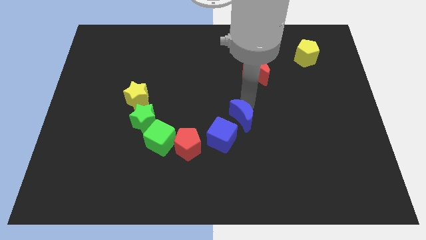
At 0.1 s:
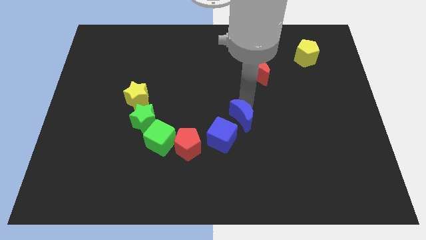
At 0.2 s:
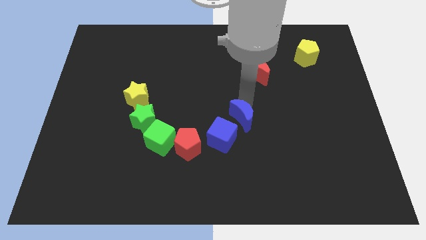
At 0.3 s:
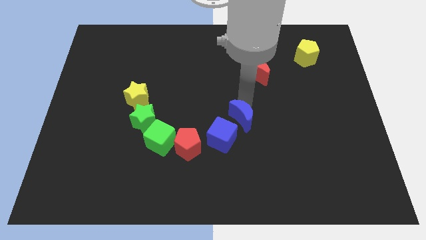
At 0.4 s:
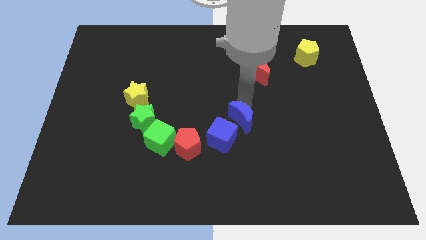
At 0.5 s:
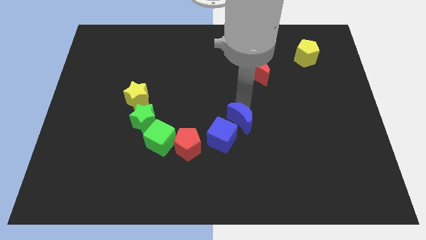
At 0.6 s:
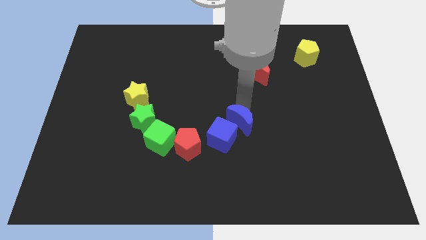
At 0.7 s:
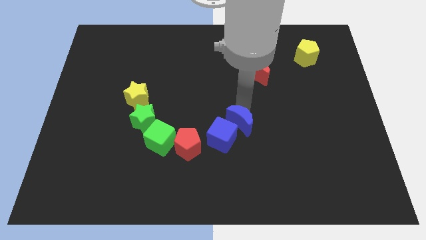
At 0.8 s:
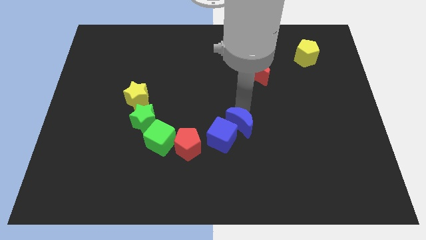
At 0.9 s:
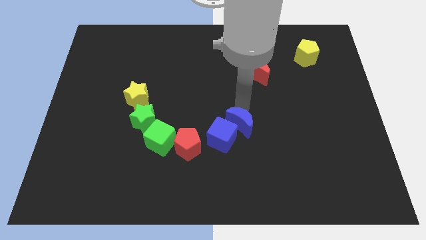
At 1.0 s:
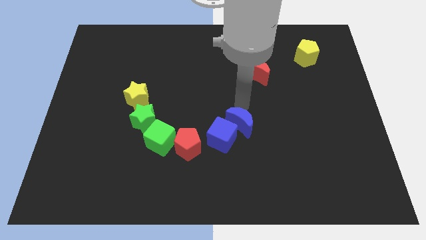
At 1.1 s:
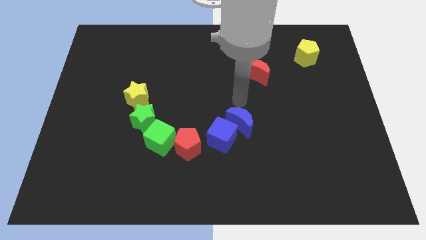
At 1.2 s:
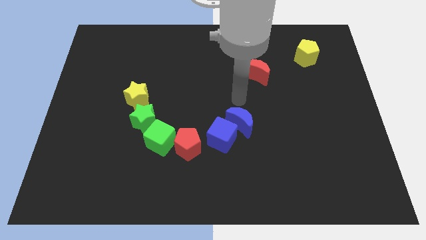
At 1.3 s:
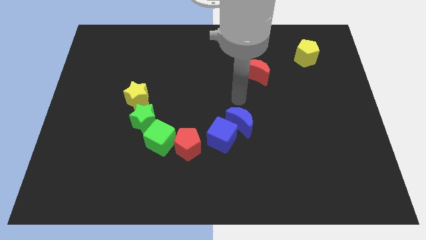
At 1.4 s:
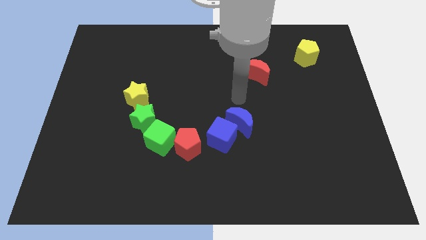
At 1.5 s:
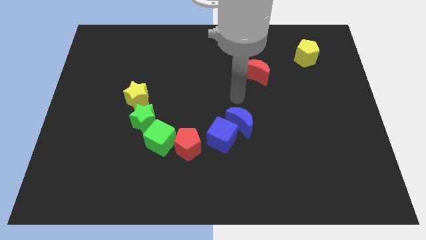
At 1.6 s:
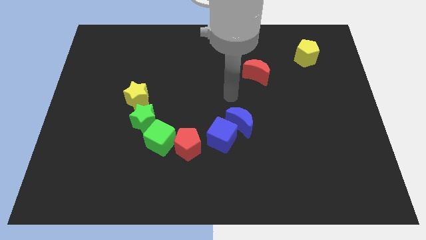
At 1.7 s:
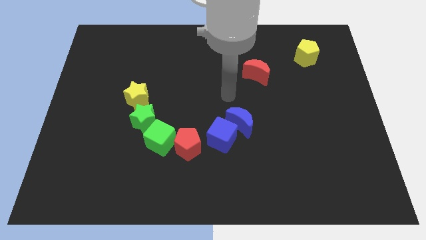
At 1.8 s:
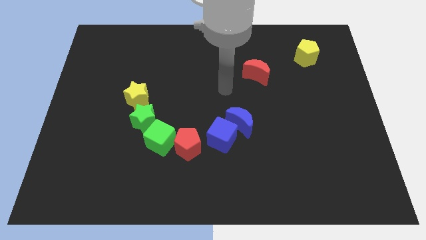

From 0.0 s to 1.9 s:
slightly push the blue moon near to blue cube

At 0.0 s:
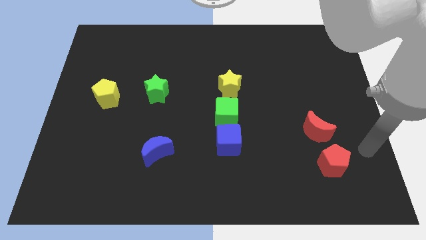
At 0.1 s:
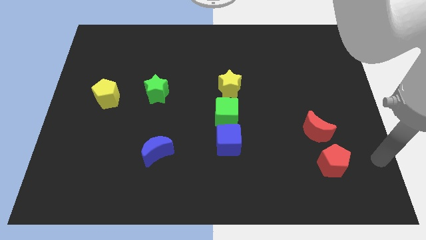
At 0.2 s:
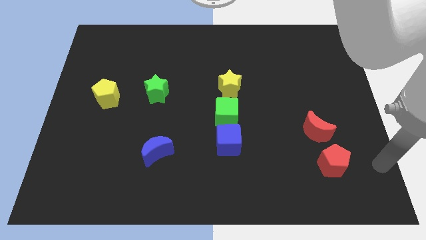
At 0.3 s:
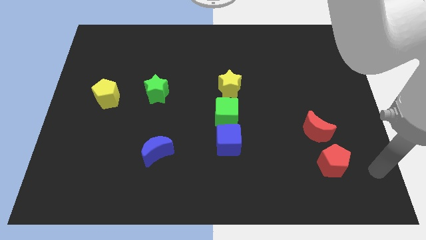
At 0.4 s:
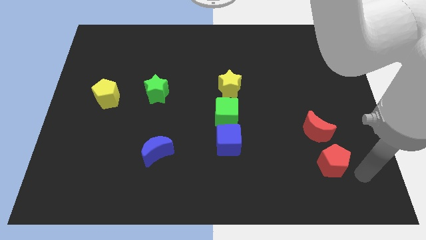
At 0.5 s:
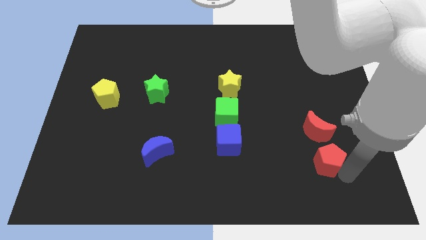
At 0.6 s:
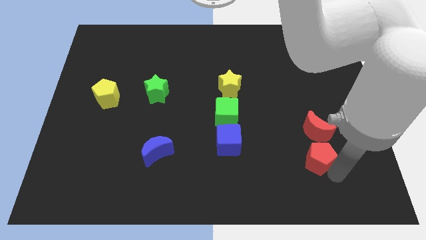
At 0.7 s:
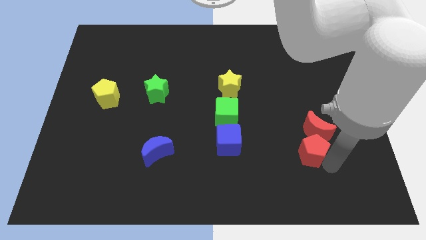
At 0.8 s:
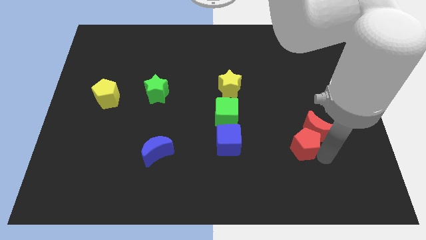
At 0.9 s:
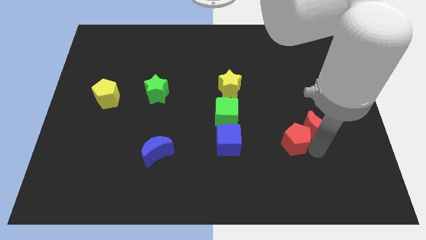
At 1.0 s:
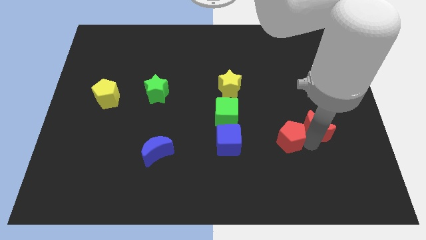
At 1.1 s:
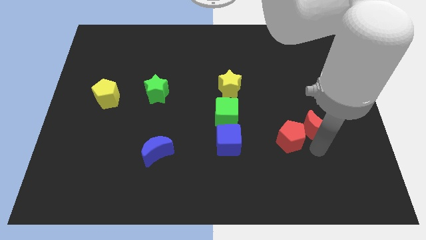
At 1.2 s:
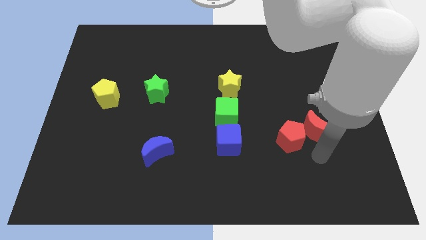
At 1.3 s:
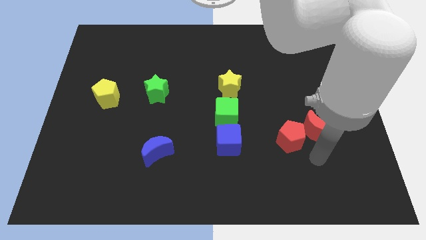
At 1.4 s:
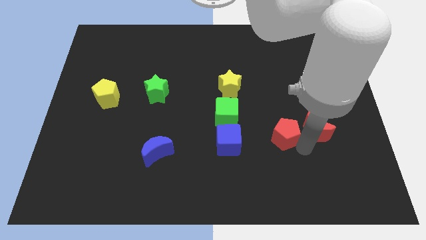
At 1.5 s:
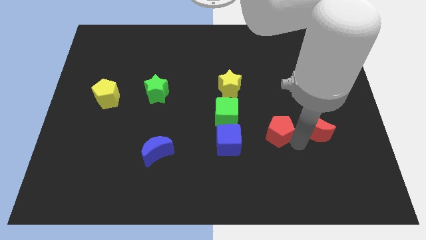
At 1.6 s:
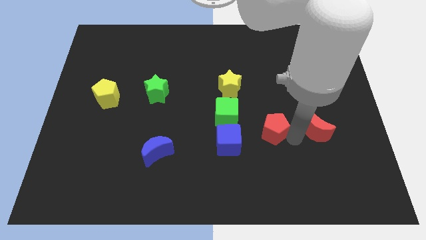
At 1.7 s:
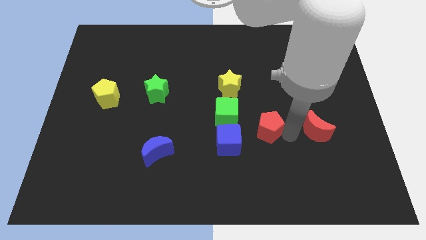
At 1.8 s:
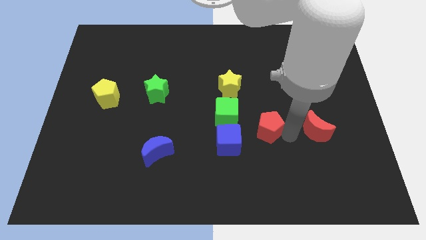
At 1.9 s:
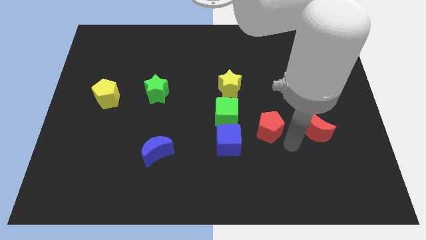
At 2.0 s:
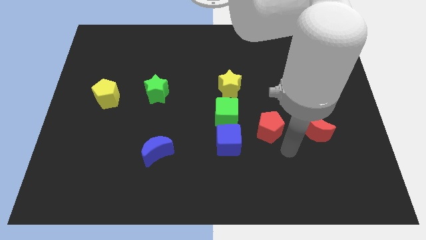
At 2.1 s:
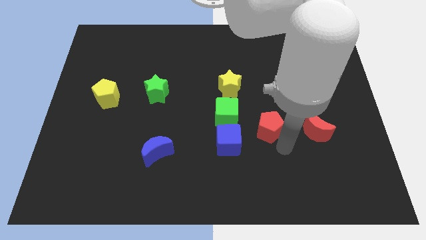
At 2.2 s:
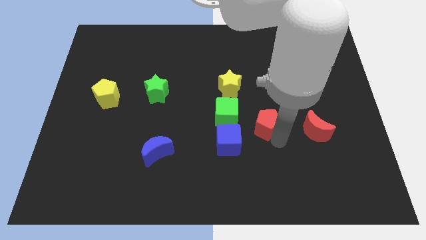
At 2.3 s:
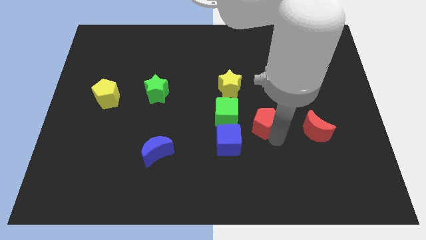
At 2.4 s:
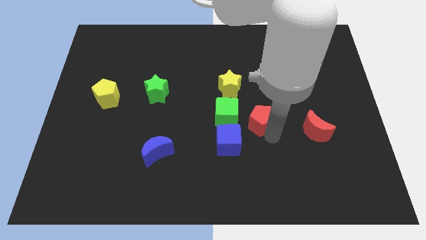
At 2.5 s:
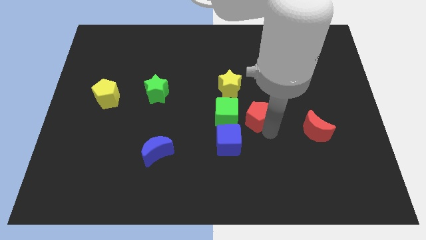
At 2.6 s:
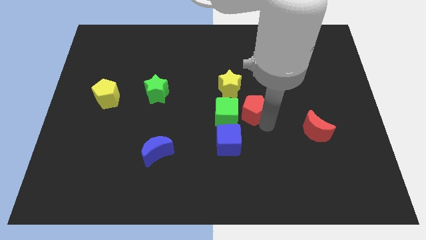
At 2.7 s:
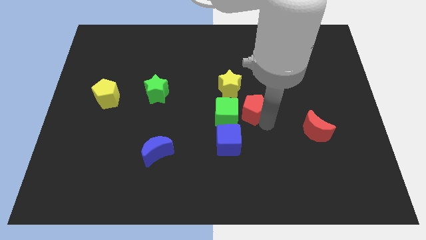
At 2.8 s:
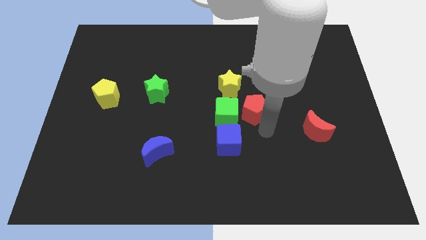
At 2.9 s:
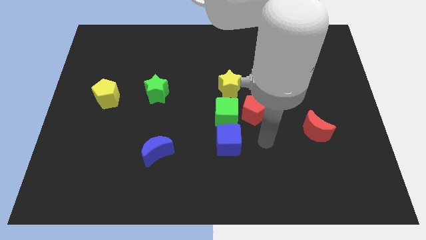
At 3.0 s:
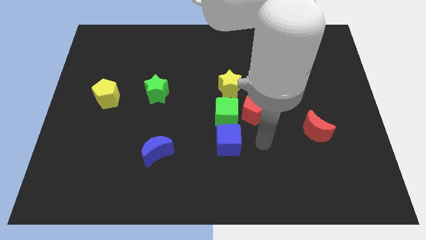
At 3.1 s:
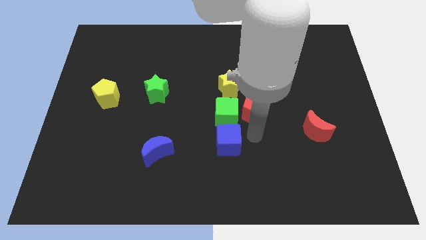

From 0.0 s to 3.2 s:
place red pentagon beside green cube

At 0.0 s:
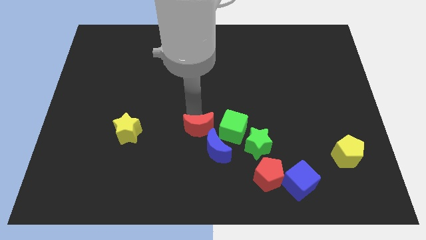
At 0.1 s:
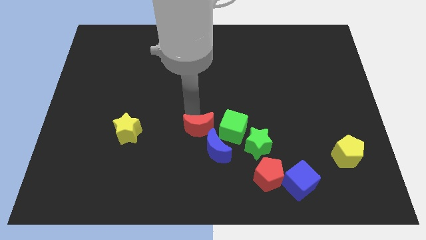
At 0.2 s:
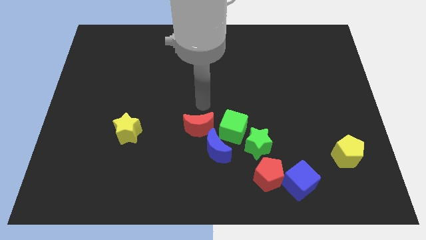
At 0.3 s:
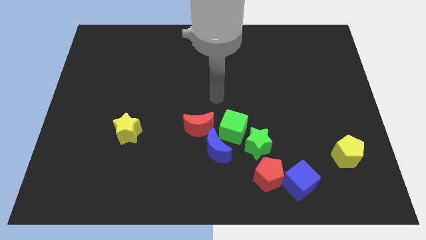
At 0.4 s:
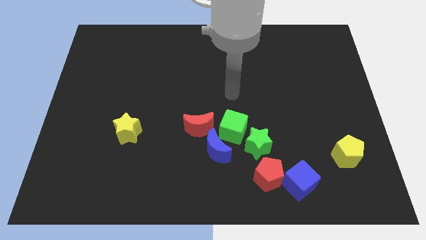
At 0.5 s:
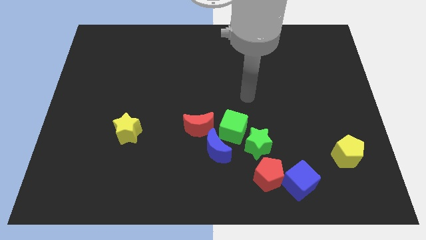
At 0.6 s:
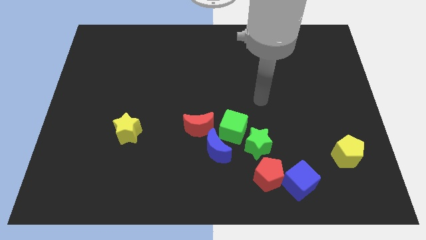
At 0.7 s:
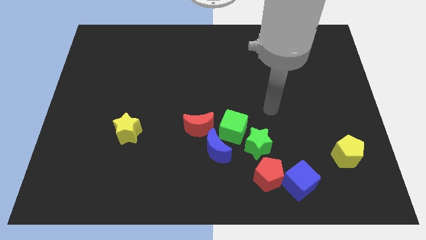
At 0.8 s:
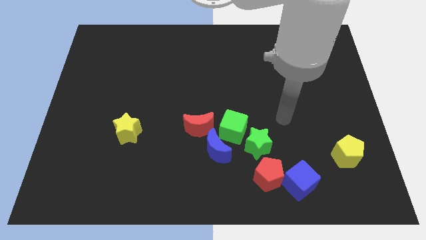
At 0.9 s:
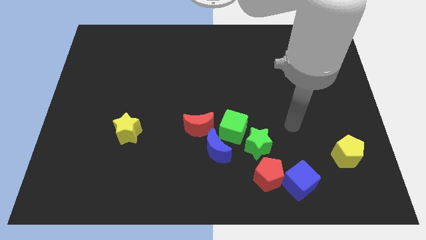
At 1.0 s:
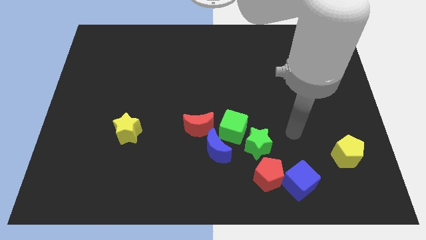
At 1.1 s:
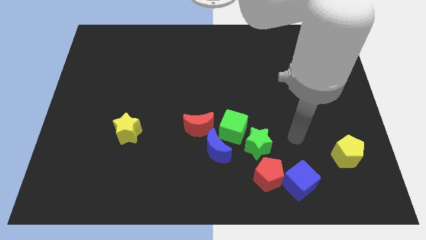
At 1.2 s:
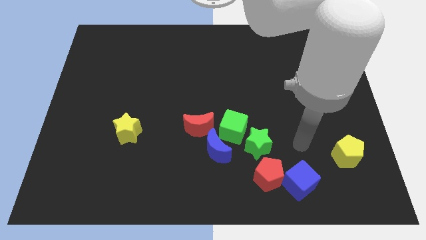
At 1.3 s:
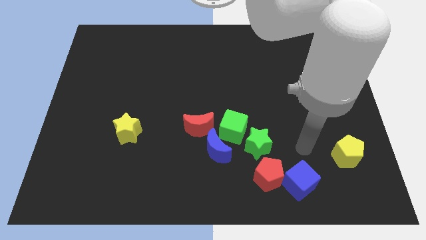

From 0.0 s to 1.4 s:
point your arm at the top of blue cube

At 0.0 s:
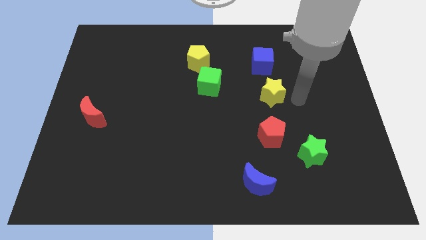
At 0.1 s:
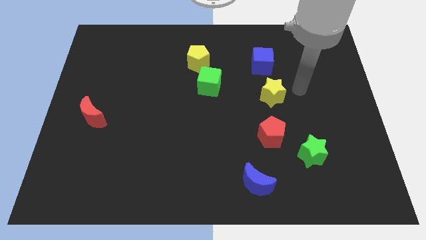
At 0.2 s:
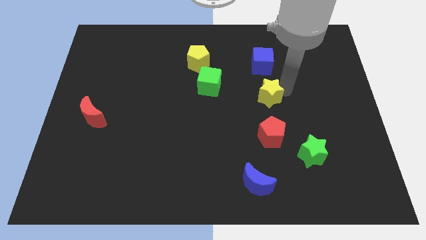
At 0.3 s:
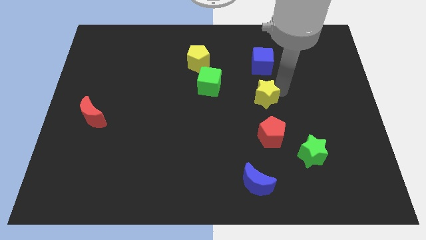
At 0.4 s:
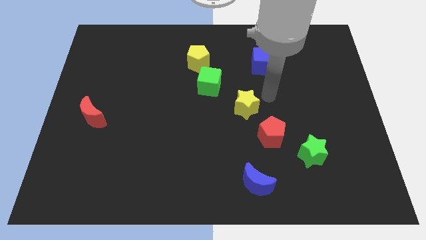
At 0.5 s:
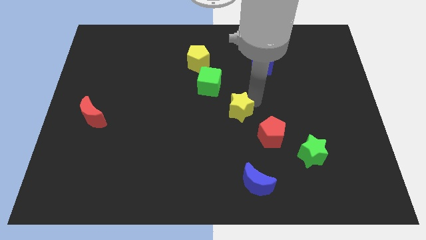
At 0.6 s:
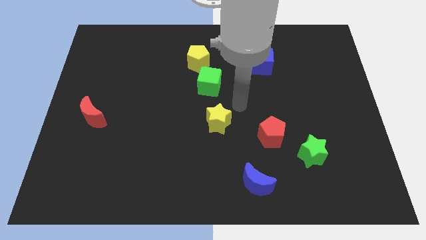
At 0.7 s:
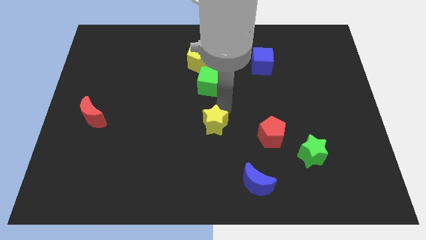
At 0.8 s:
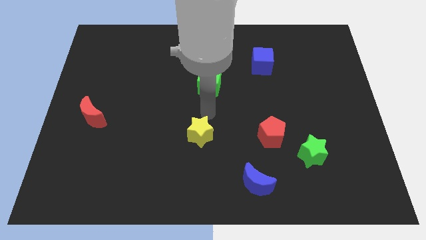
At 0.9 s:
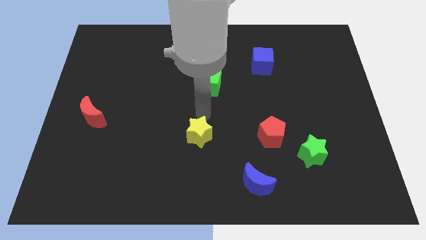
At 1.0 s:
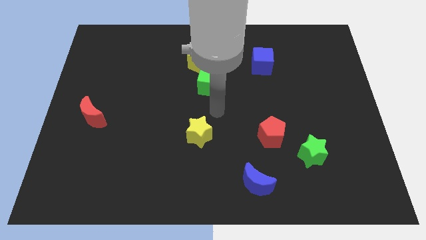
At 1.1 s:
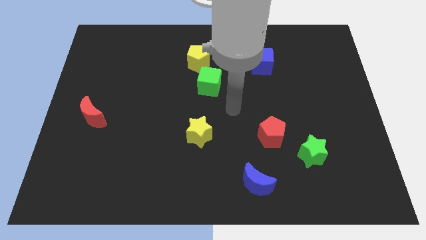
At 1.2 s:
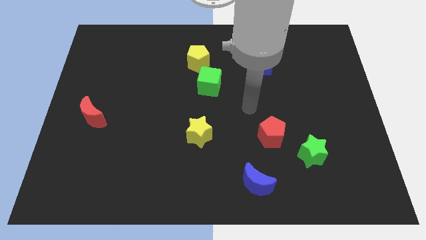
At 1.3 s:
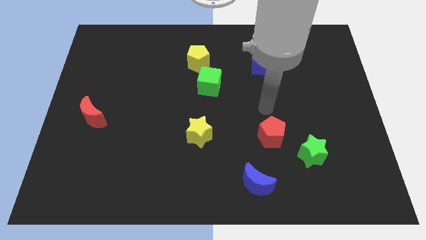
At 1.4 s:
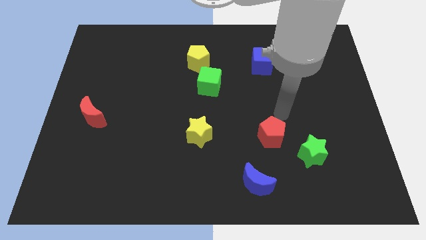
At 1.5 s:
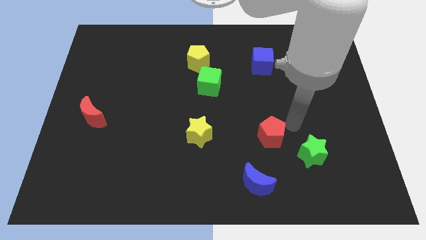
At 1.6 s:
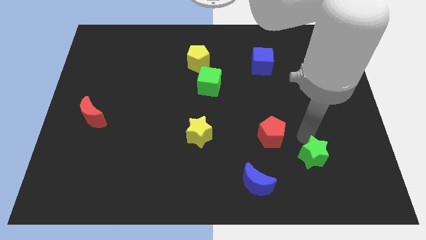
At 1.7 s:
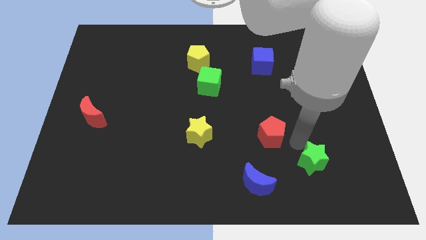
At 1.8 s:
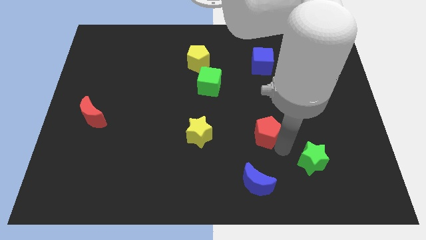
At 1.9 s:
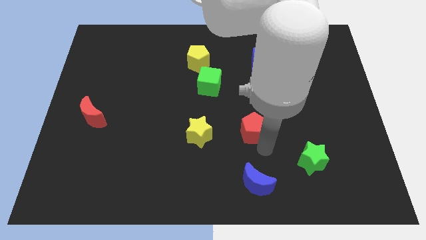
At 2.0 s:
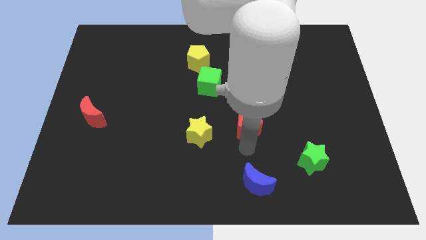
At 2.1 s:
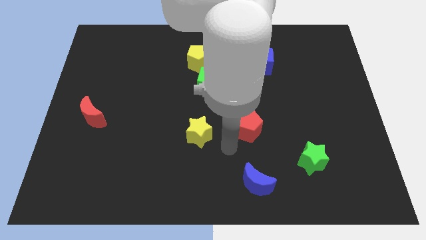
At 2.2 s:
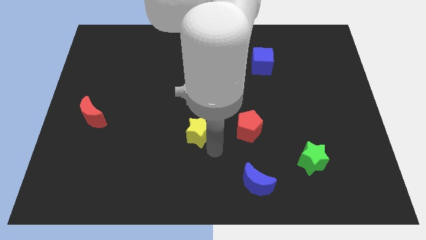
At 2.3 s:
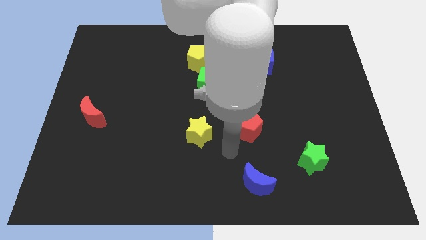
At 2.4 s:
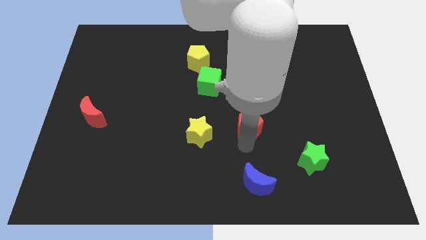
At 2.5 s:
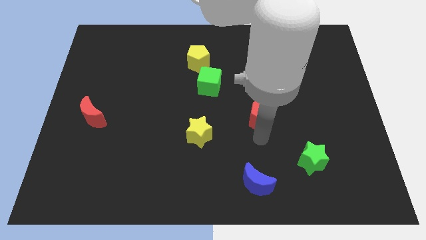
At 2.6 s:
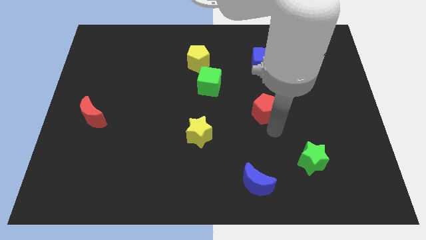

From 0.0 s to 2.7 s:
adjust the red pentagon and the green stars to form a triangle
